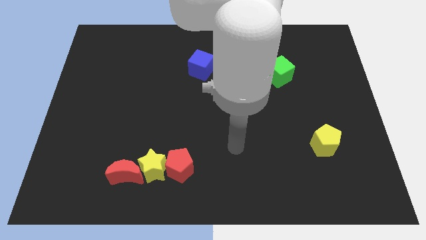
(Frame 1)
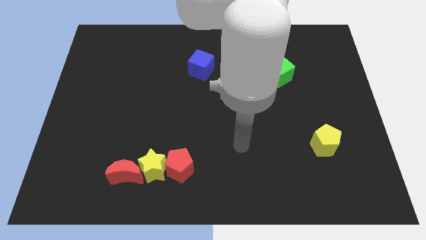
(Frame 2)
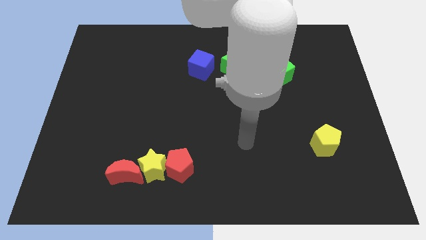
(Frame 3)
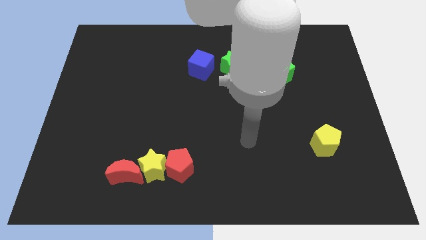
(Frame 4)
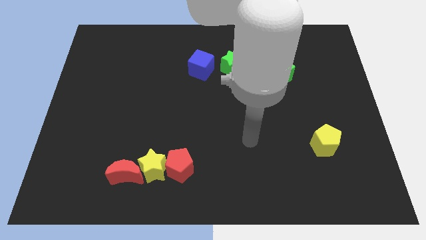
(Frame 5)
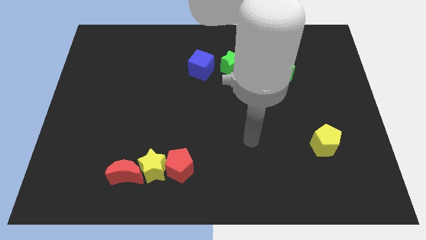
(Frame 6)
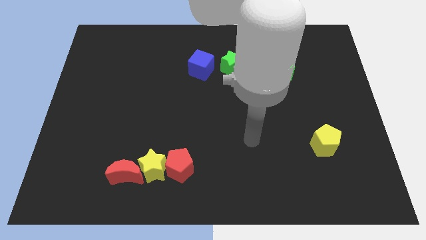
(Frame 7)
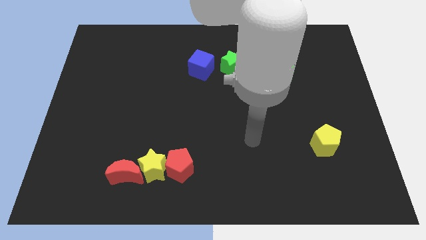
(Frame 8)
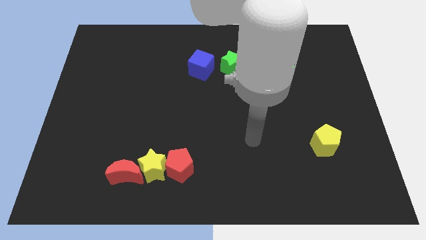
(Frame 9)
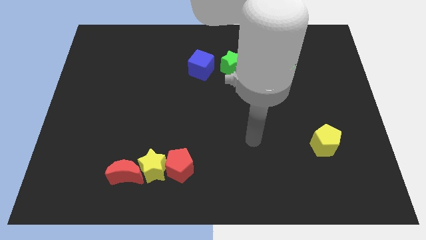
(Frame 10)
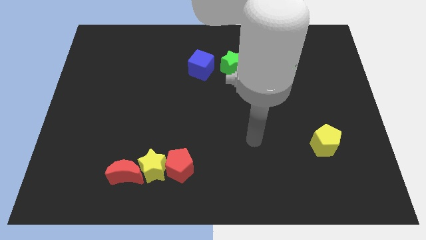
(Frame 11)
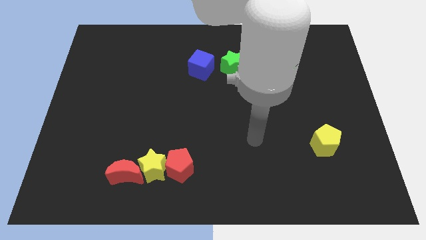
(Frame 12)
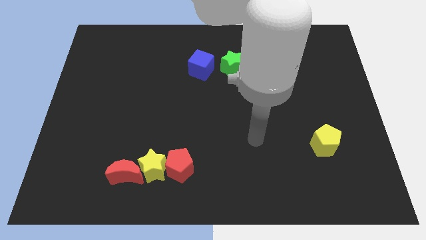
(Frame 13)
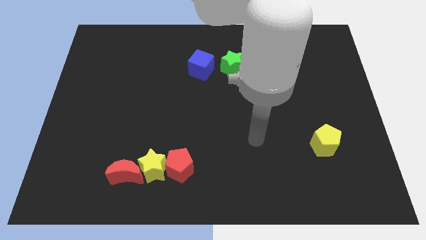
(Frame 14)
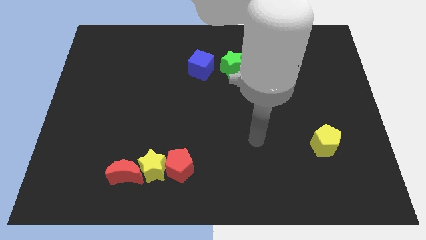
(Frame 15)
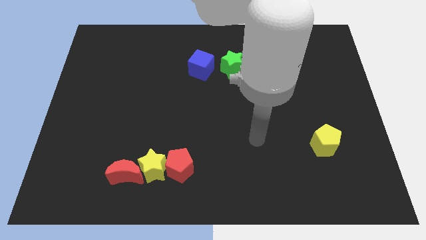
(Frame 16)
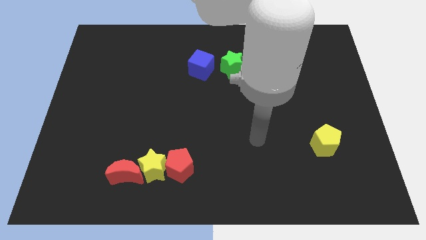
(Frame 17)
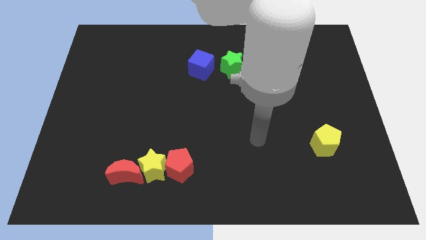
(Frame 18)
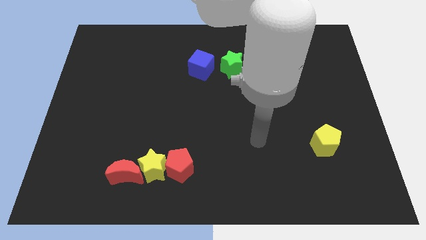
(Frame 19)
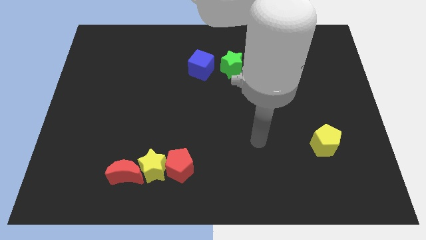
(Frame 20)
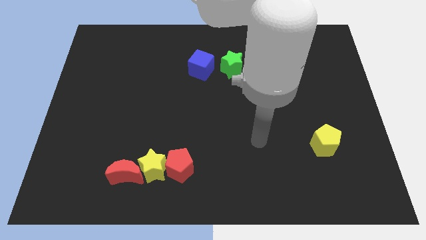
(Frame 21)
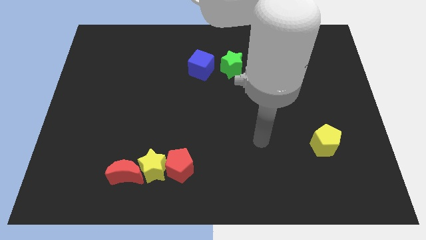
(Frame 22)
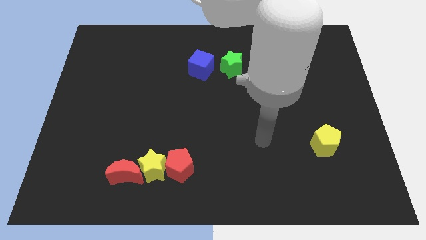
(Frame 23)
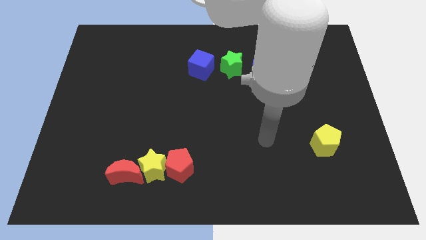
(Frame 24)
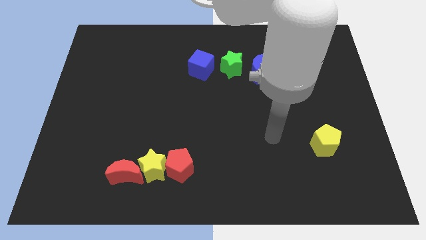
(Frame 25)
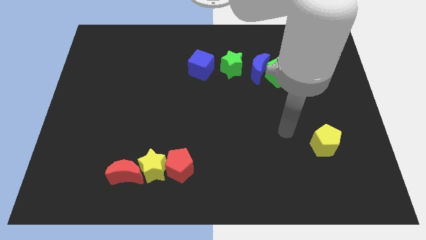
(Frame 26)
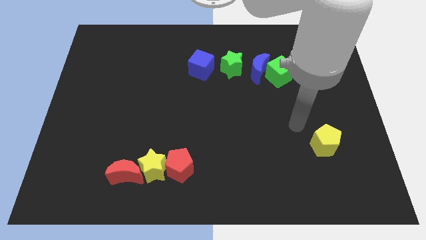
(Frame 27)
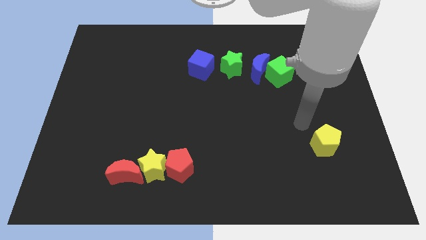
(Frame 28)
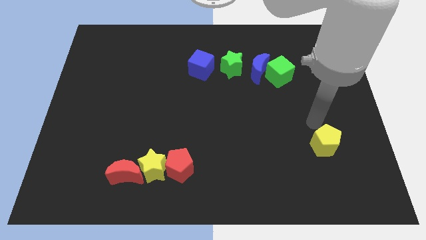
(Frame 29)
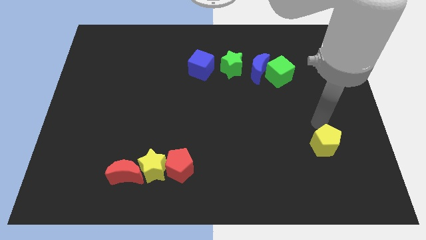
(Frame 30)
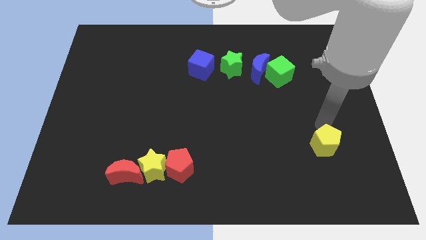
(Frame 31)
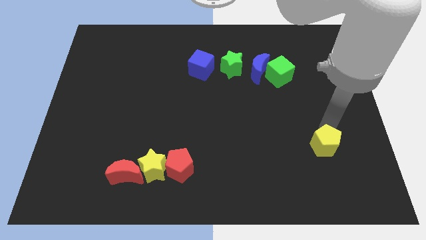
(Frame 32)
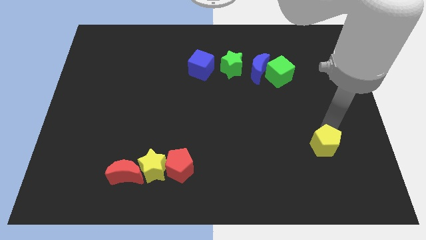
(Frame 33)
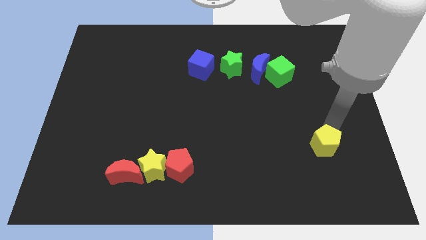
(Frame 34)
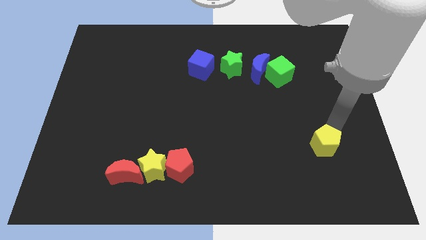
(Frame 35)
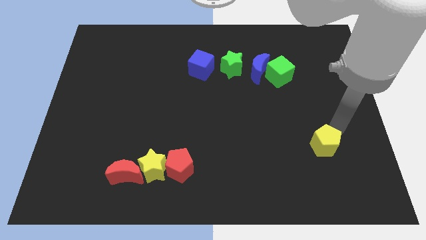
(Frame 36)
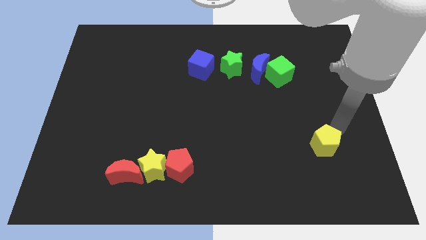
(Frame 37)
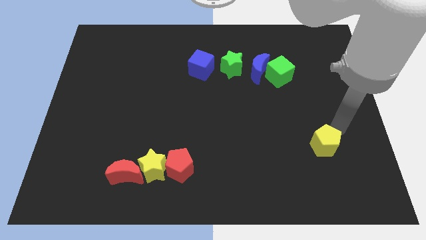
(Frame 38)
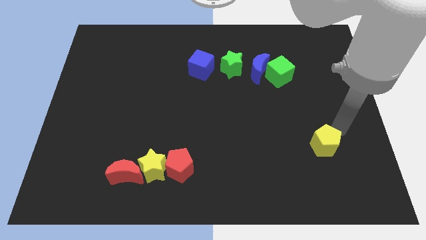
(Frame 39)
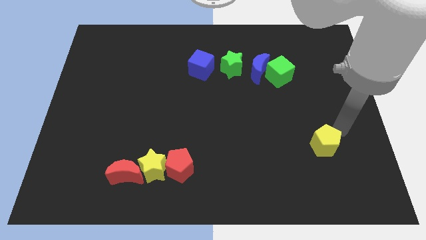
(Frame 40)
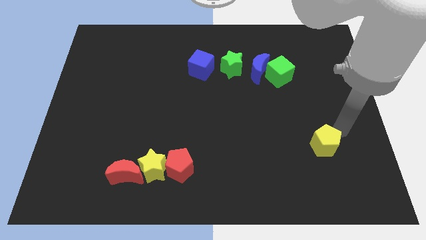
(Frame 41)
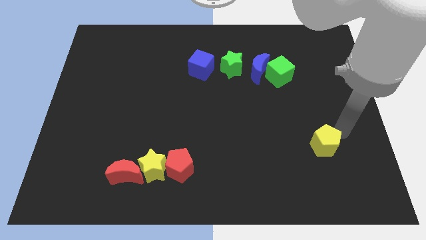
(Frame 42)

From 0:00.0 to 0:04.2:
place the arm at the right side of the yellow pentagon

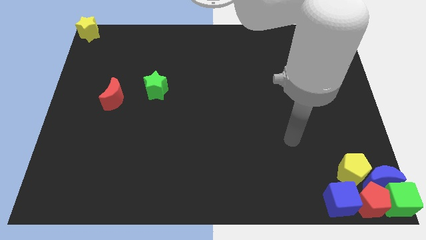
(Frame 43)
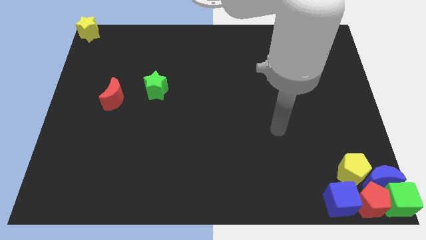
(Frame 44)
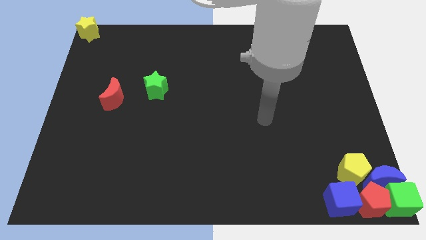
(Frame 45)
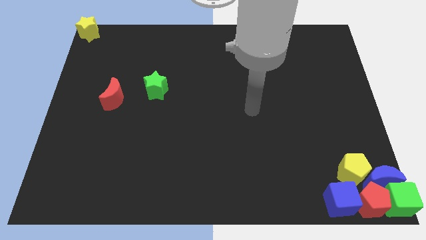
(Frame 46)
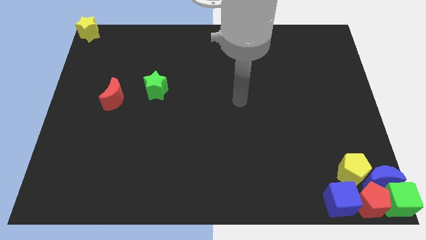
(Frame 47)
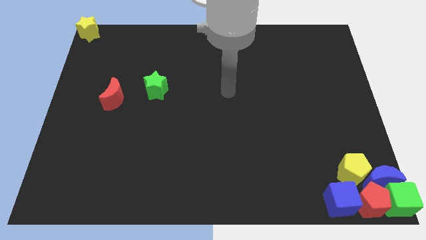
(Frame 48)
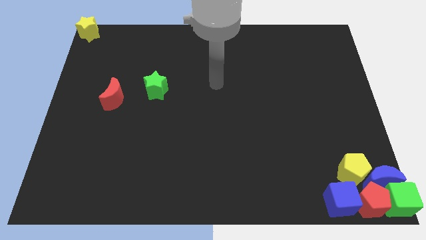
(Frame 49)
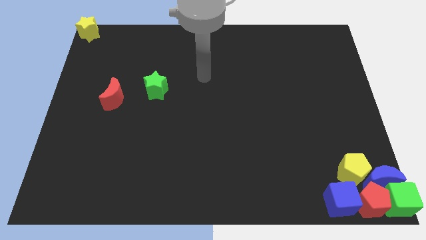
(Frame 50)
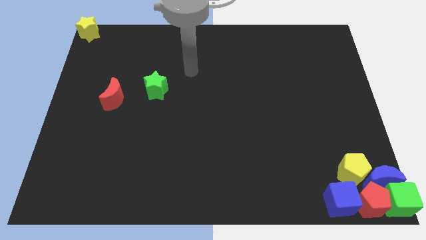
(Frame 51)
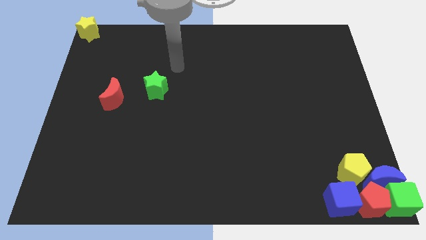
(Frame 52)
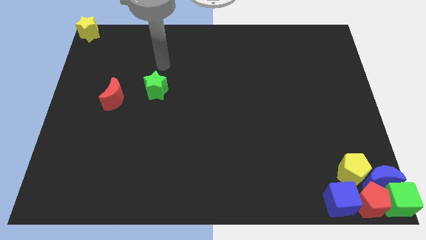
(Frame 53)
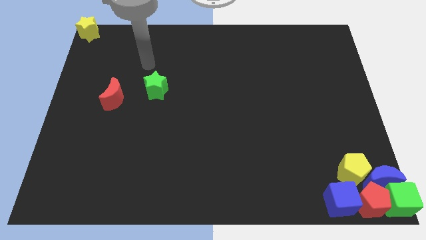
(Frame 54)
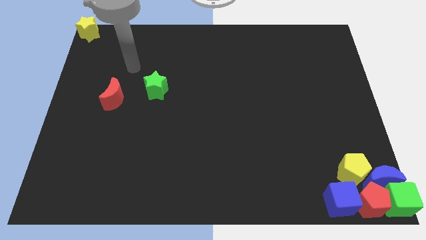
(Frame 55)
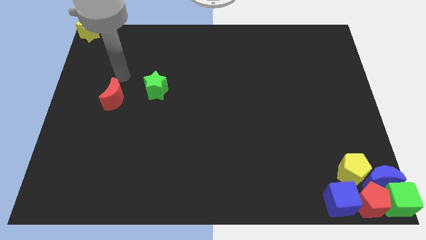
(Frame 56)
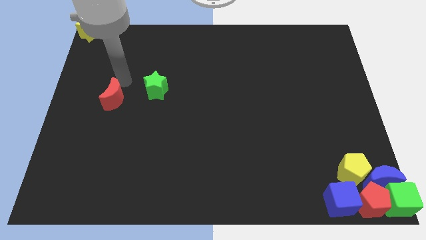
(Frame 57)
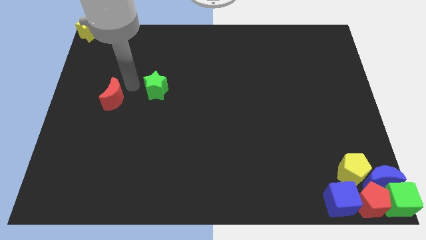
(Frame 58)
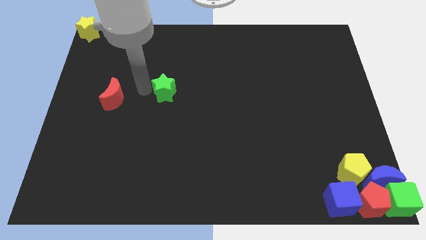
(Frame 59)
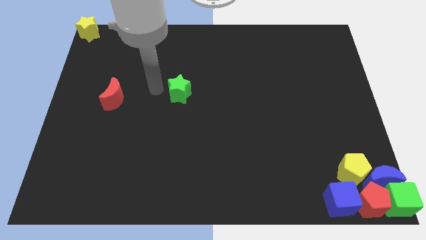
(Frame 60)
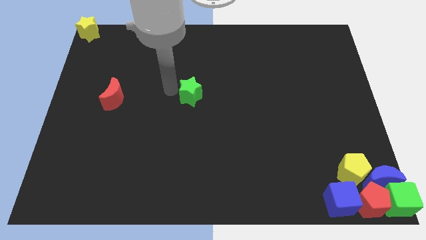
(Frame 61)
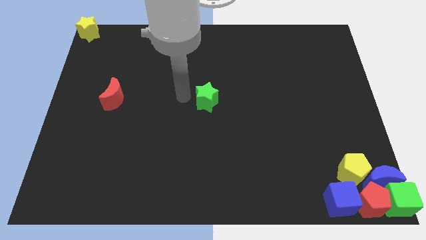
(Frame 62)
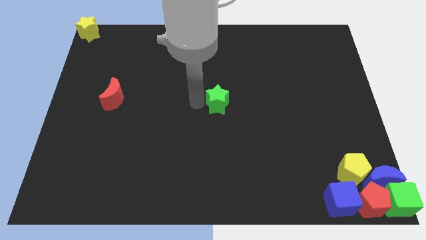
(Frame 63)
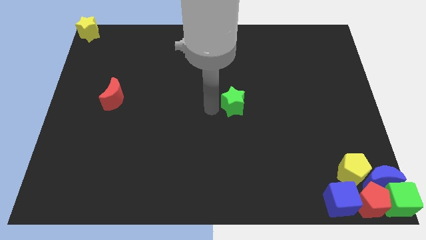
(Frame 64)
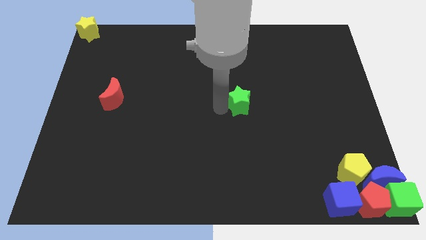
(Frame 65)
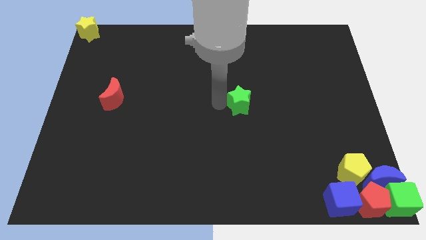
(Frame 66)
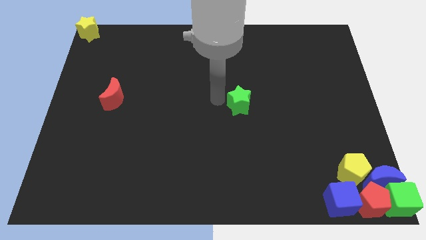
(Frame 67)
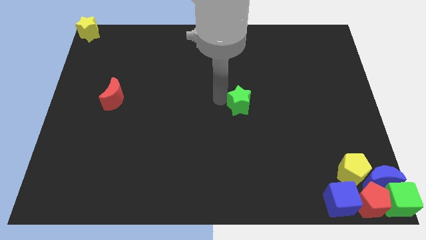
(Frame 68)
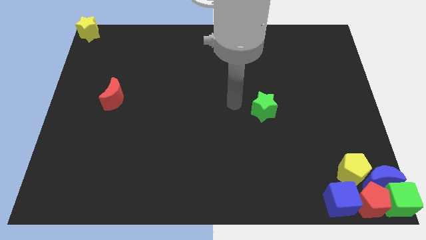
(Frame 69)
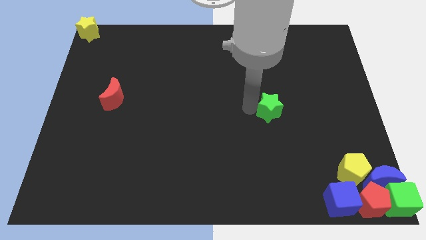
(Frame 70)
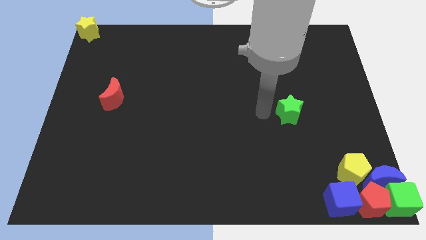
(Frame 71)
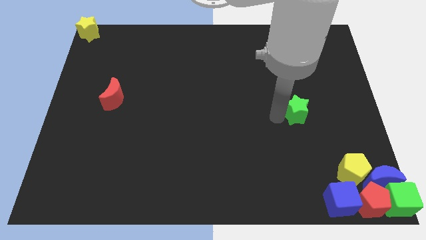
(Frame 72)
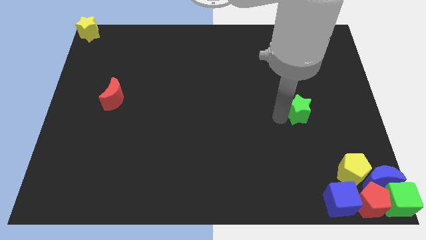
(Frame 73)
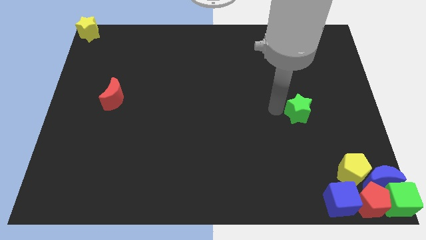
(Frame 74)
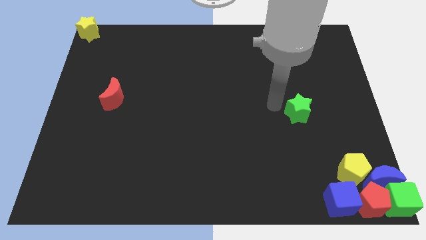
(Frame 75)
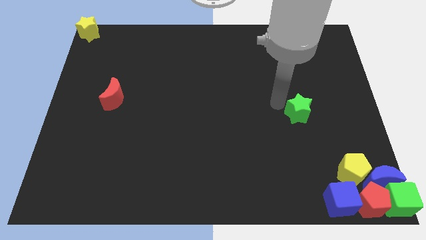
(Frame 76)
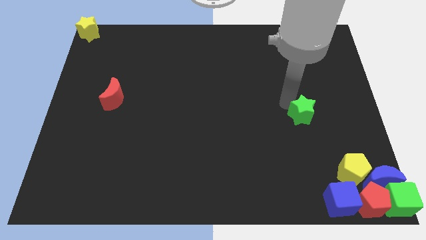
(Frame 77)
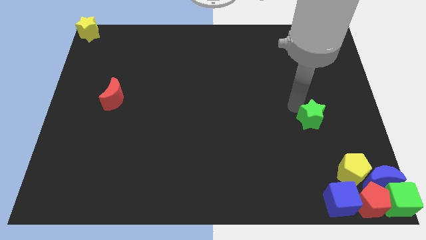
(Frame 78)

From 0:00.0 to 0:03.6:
drag the green star towards the group of blocks

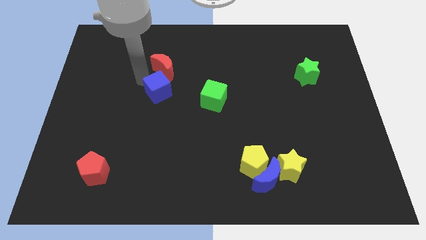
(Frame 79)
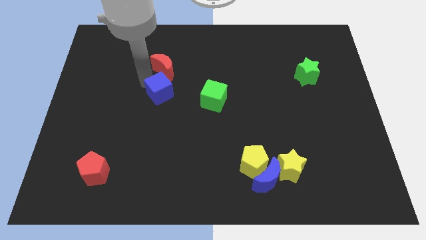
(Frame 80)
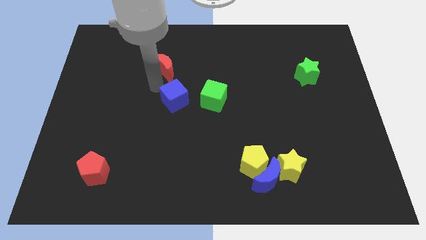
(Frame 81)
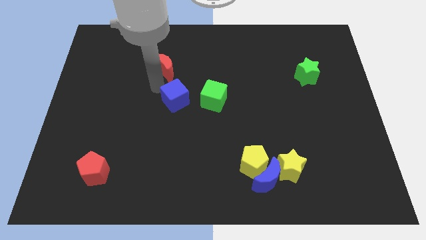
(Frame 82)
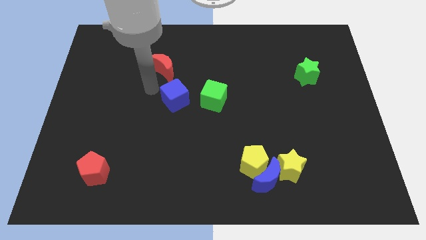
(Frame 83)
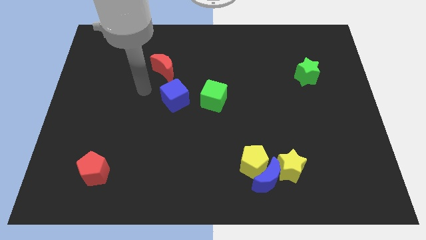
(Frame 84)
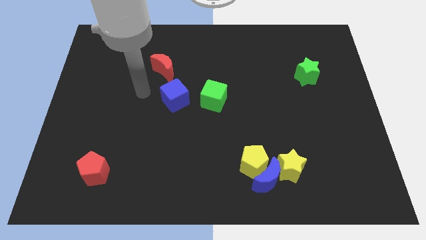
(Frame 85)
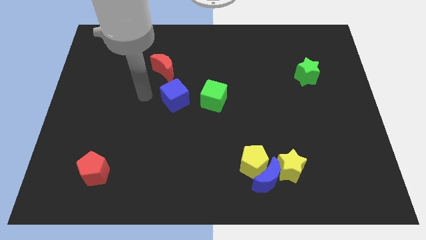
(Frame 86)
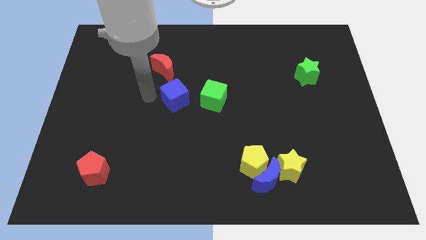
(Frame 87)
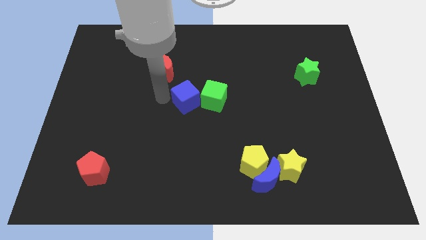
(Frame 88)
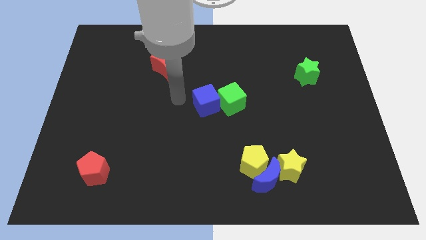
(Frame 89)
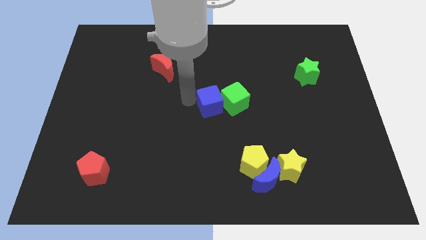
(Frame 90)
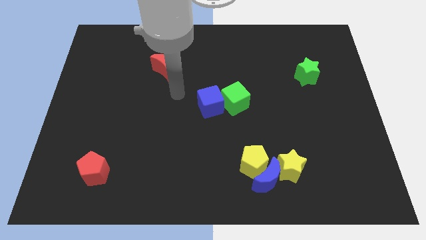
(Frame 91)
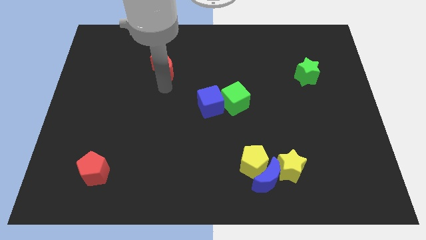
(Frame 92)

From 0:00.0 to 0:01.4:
push the blue cube into the green cube
